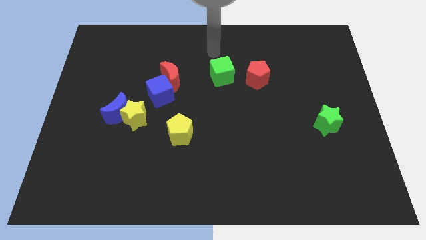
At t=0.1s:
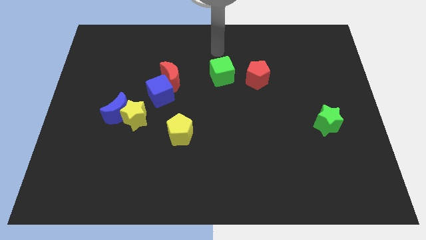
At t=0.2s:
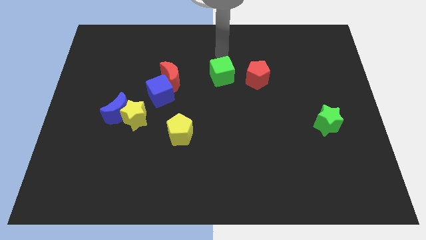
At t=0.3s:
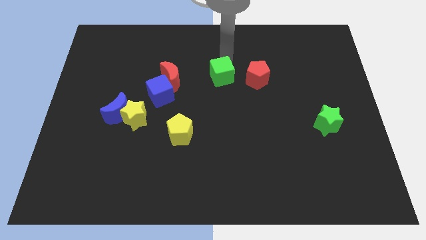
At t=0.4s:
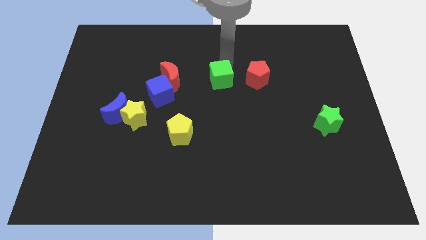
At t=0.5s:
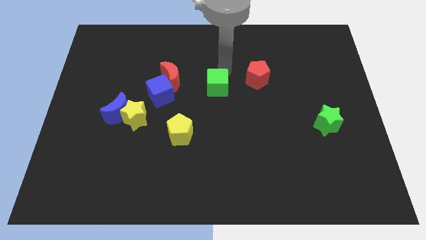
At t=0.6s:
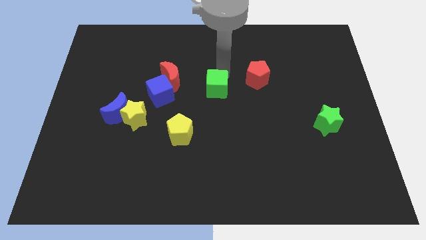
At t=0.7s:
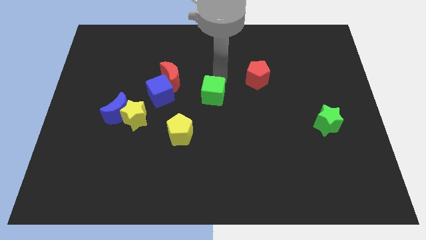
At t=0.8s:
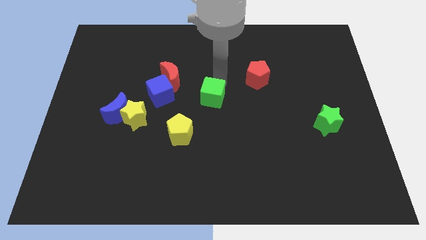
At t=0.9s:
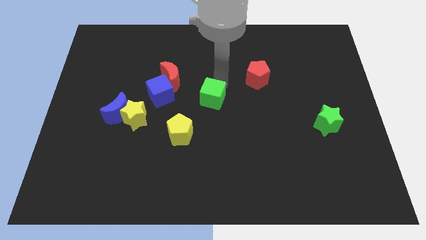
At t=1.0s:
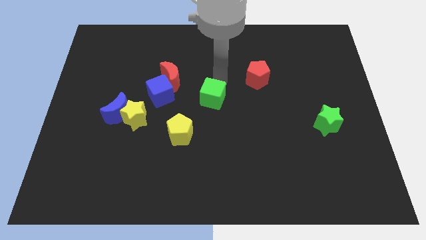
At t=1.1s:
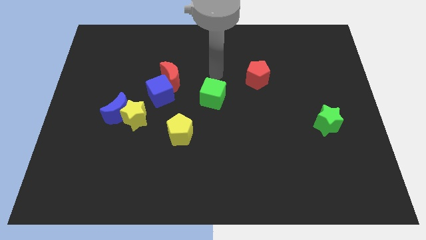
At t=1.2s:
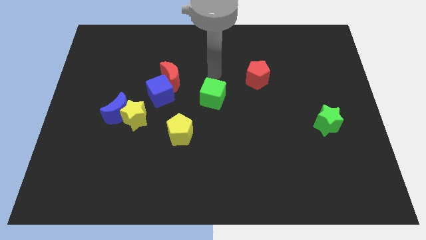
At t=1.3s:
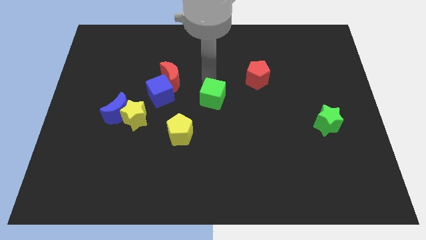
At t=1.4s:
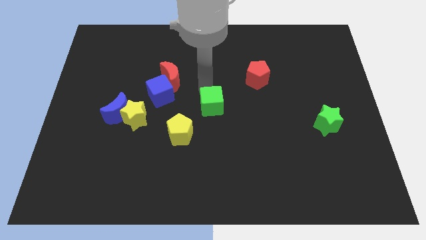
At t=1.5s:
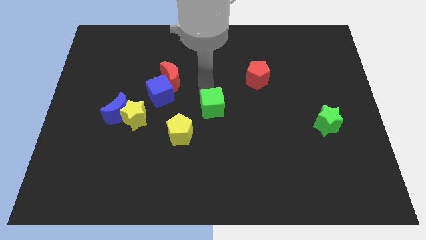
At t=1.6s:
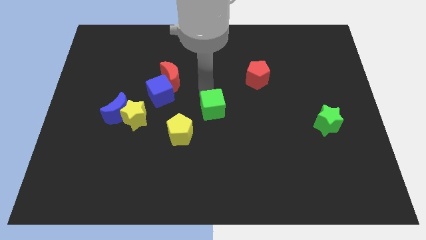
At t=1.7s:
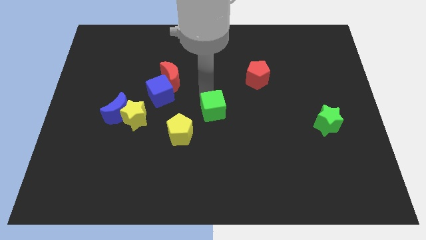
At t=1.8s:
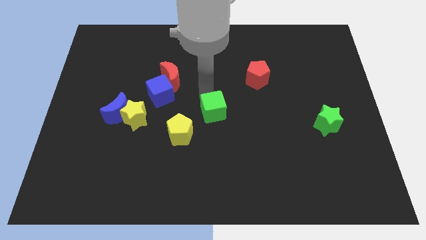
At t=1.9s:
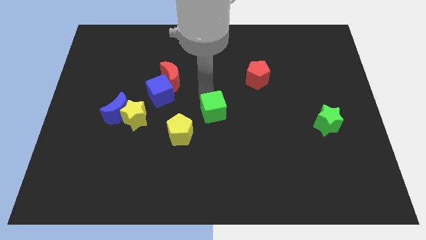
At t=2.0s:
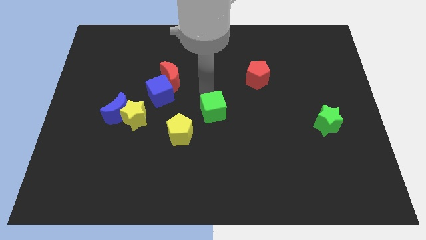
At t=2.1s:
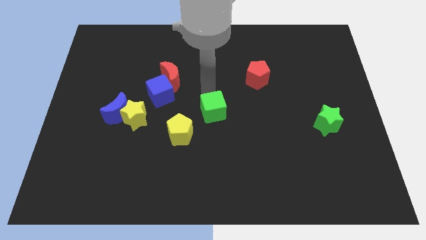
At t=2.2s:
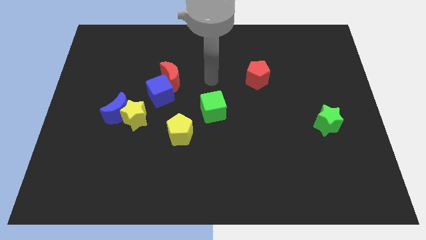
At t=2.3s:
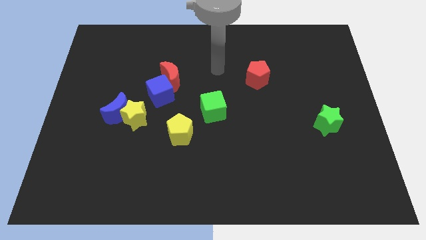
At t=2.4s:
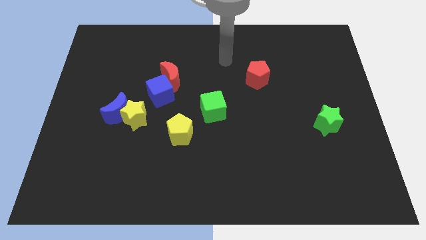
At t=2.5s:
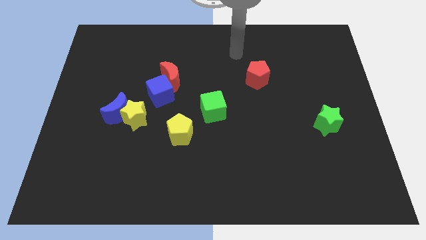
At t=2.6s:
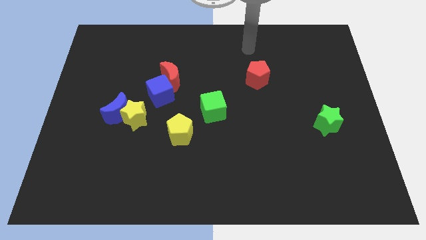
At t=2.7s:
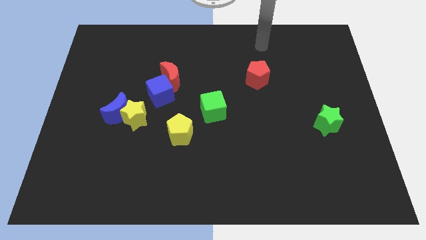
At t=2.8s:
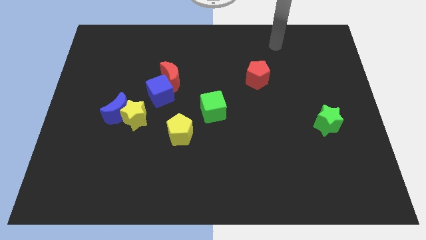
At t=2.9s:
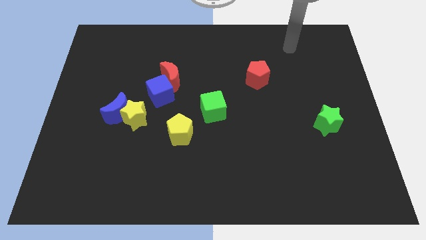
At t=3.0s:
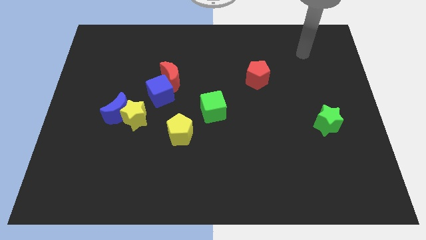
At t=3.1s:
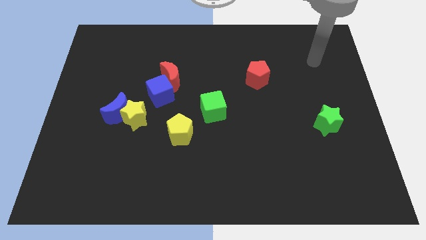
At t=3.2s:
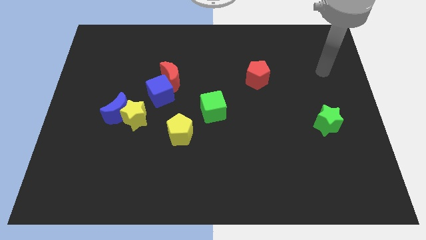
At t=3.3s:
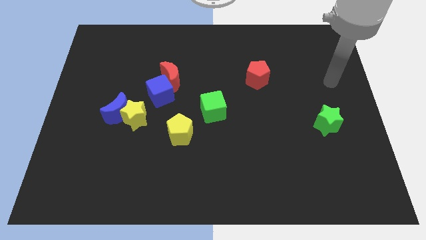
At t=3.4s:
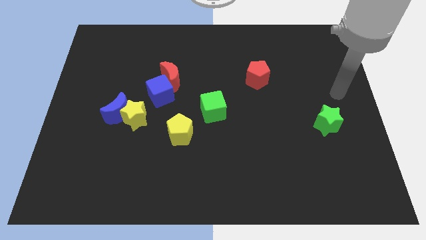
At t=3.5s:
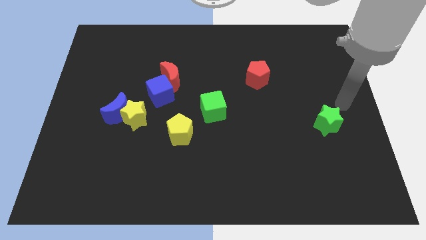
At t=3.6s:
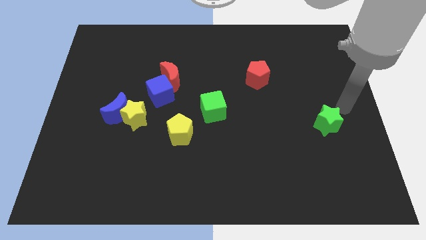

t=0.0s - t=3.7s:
move the green cube towards the center of the board

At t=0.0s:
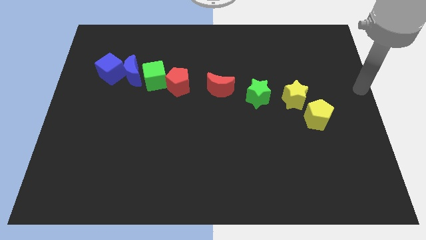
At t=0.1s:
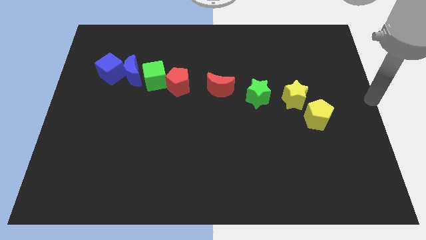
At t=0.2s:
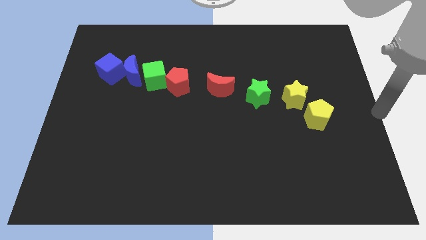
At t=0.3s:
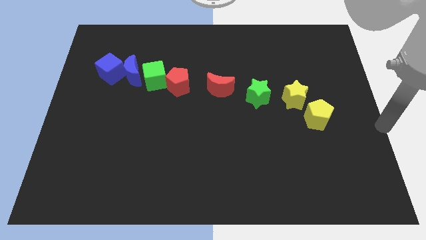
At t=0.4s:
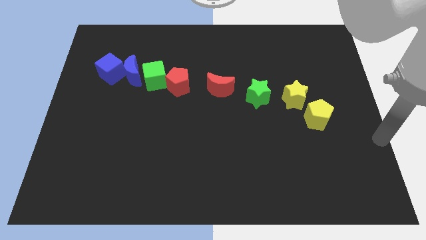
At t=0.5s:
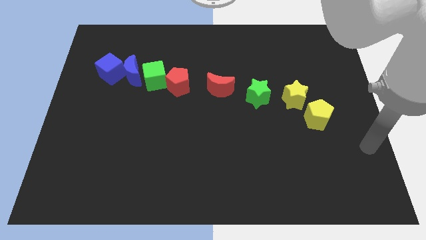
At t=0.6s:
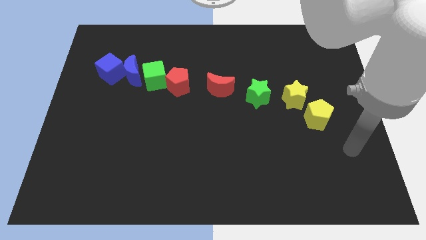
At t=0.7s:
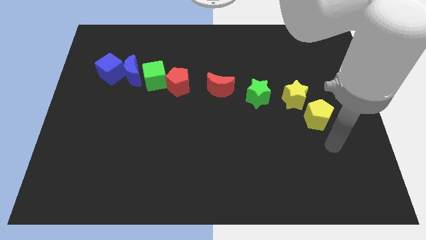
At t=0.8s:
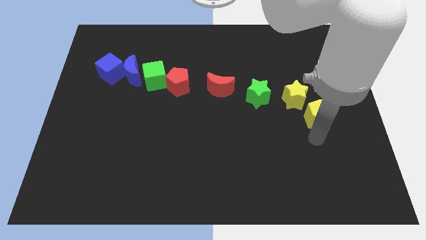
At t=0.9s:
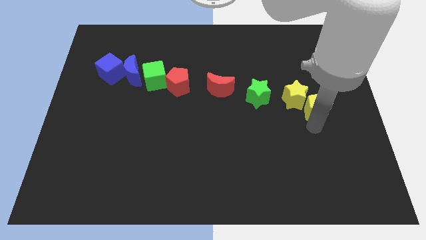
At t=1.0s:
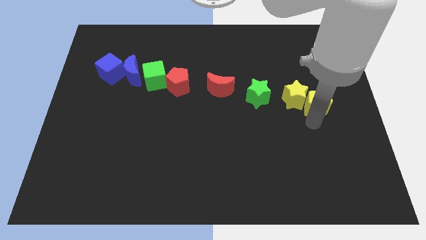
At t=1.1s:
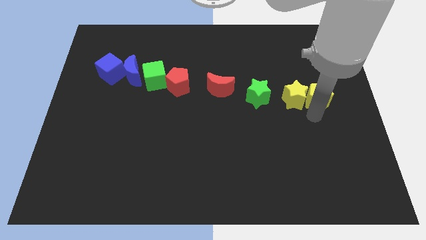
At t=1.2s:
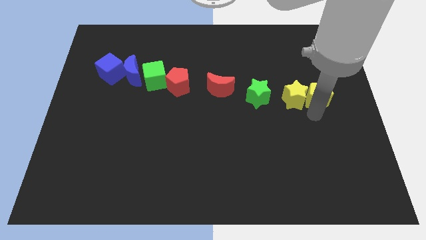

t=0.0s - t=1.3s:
place the yellow pentagon right to the yellow star

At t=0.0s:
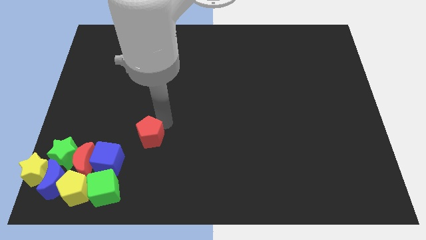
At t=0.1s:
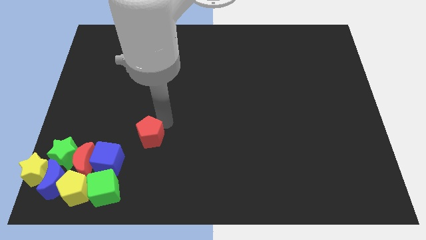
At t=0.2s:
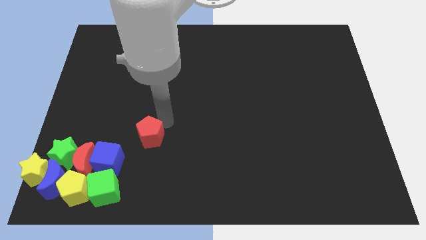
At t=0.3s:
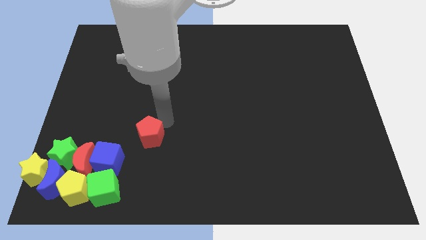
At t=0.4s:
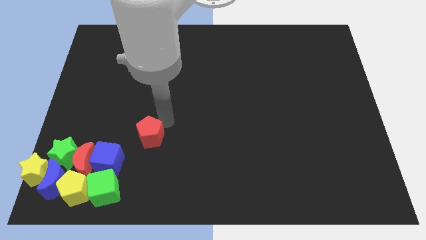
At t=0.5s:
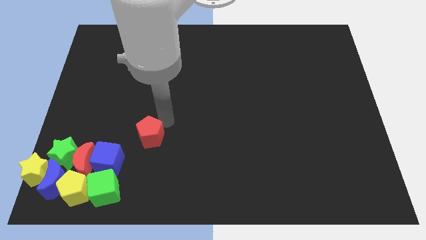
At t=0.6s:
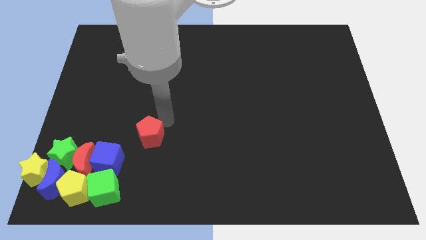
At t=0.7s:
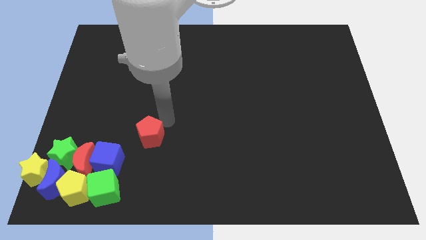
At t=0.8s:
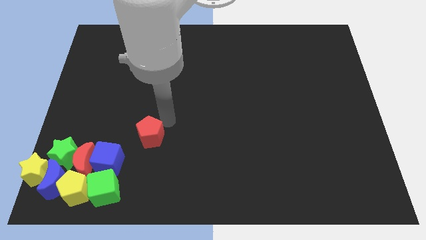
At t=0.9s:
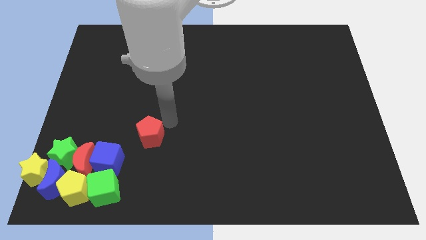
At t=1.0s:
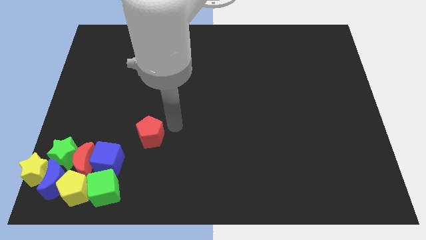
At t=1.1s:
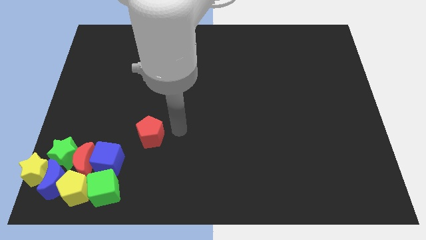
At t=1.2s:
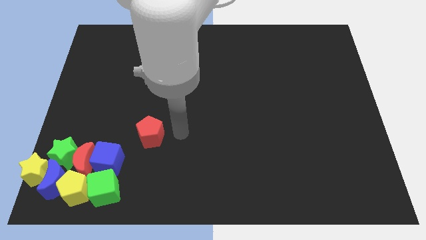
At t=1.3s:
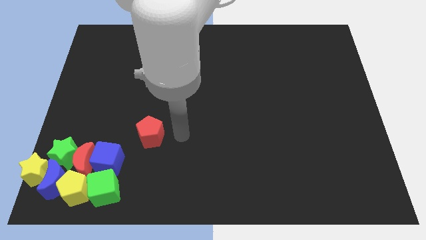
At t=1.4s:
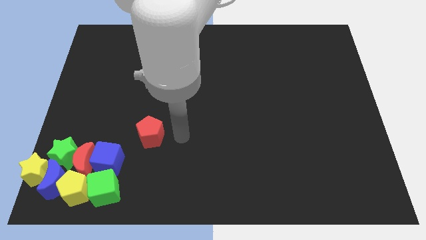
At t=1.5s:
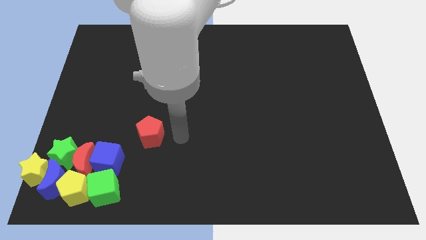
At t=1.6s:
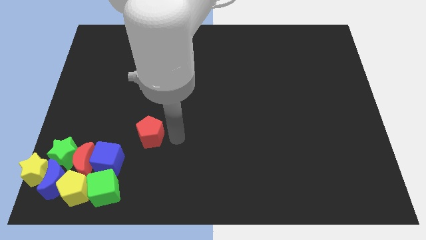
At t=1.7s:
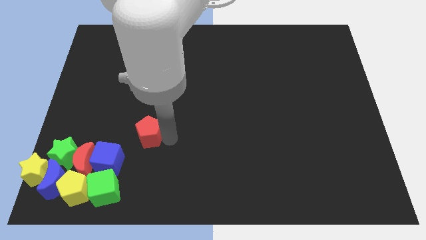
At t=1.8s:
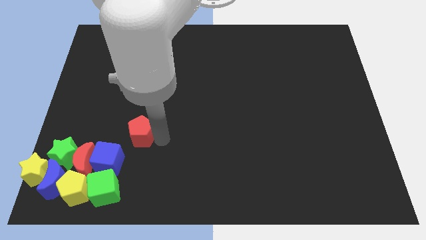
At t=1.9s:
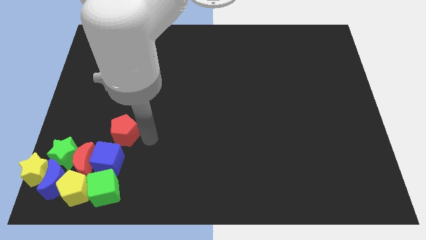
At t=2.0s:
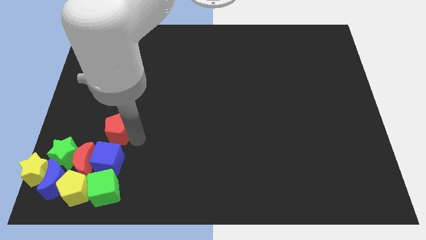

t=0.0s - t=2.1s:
slide red pentagon on top of blue cube

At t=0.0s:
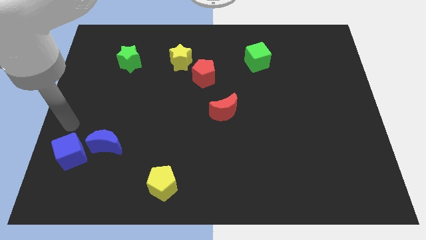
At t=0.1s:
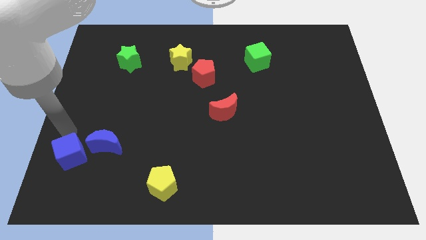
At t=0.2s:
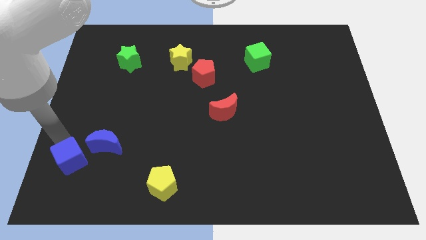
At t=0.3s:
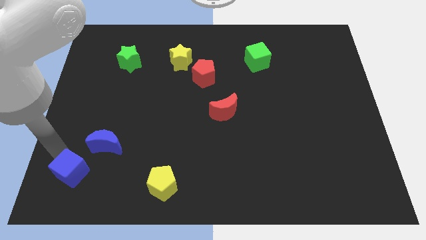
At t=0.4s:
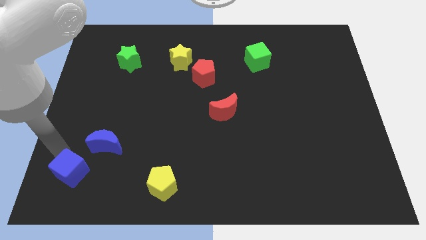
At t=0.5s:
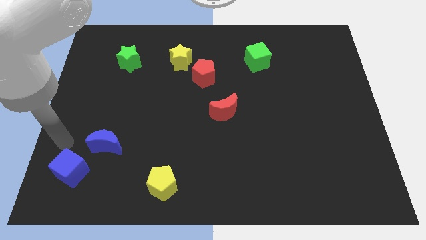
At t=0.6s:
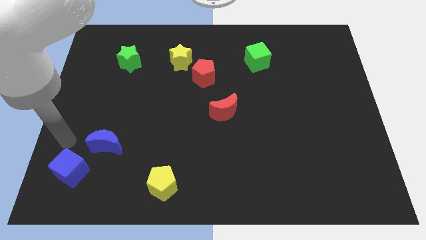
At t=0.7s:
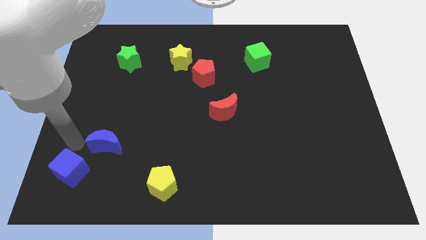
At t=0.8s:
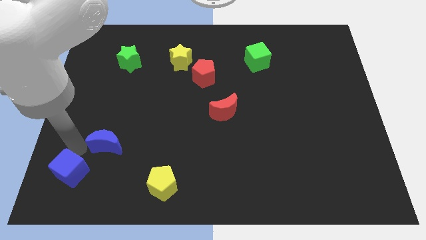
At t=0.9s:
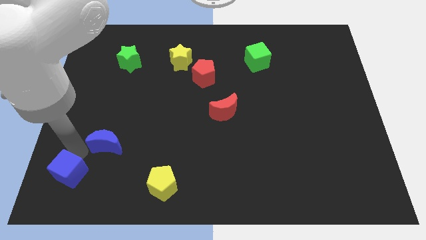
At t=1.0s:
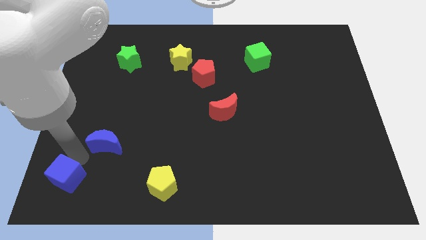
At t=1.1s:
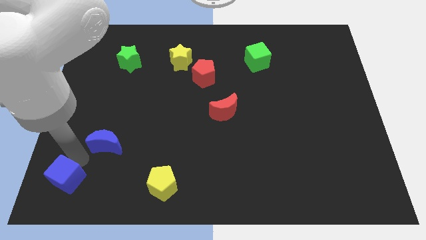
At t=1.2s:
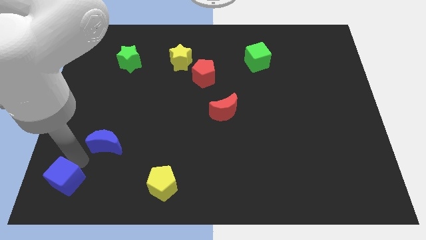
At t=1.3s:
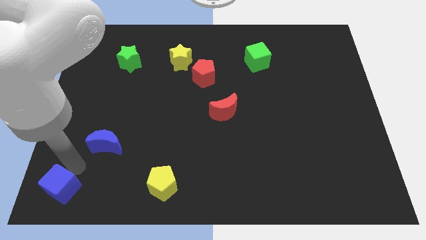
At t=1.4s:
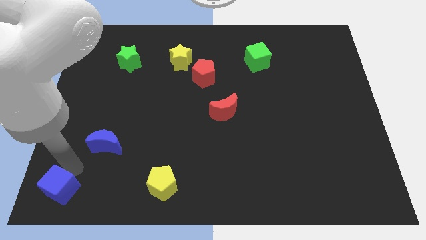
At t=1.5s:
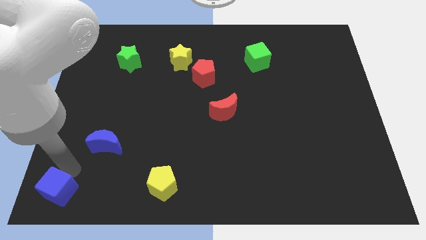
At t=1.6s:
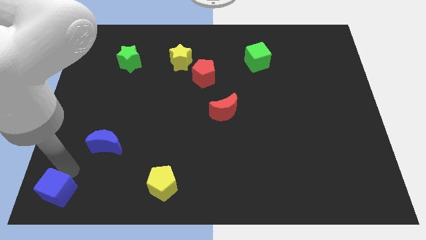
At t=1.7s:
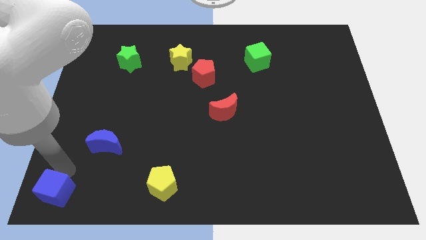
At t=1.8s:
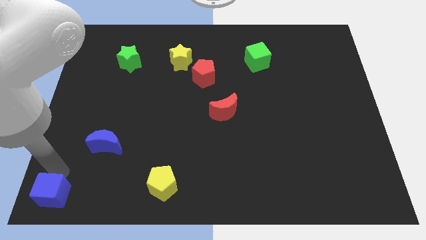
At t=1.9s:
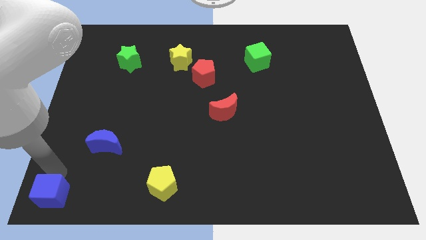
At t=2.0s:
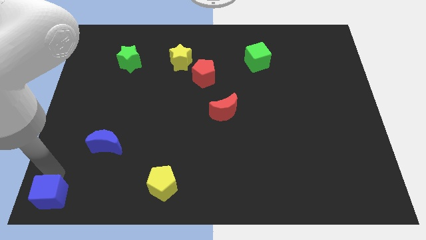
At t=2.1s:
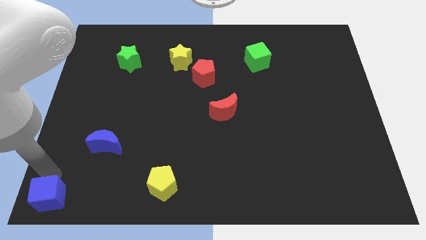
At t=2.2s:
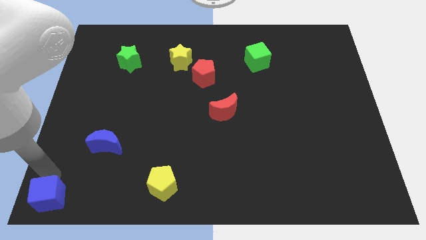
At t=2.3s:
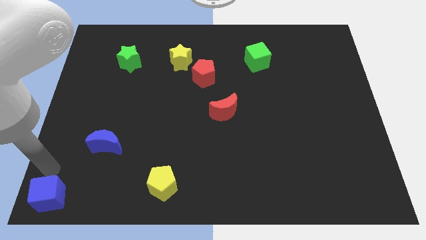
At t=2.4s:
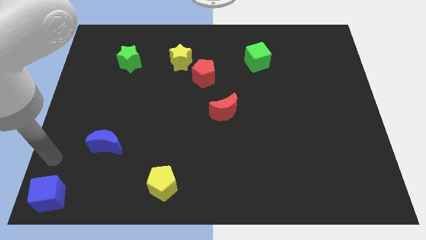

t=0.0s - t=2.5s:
place the blue cube towards the bottom left corner of the board
